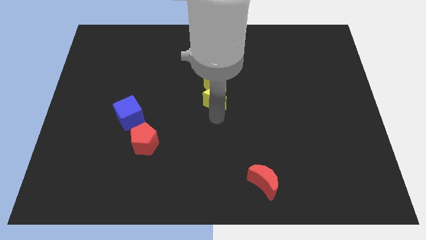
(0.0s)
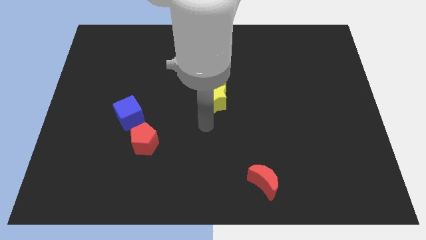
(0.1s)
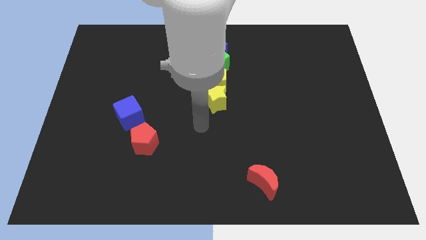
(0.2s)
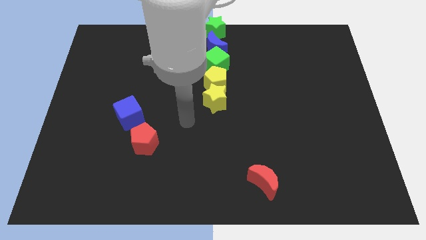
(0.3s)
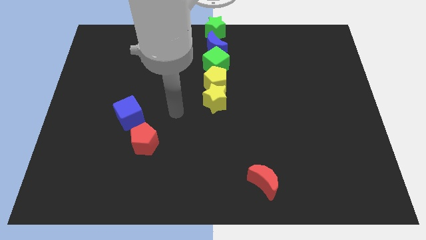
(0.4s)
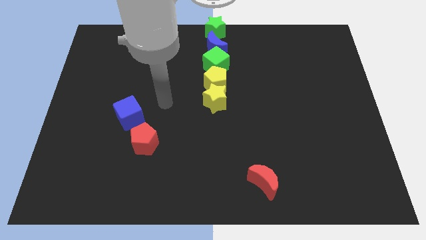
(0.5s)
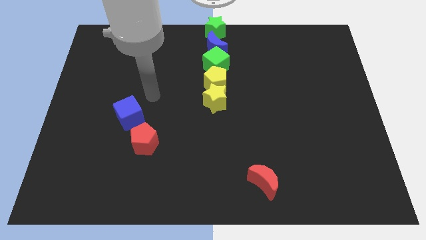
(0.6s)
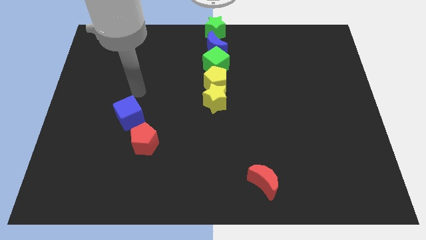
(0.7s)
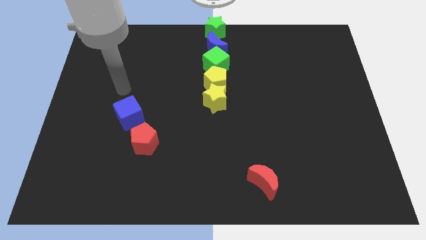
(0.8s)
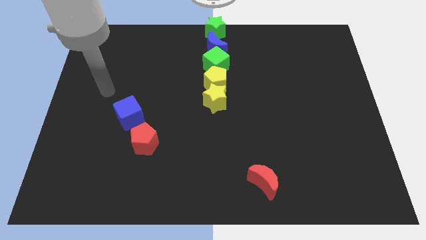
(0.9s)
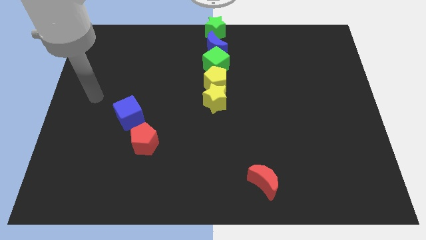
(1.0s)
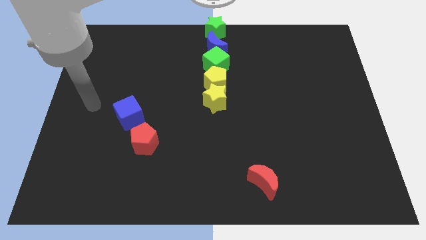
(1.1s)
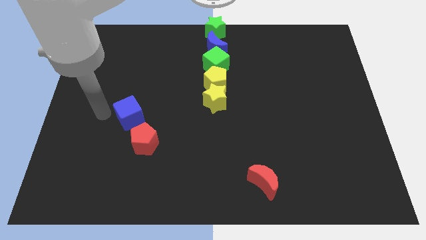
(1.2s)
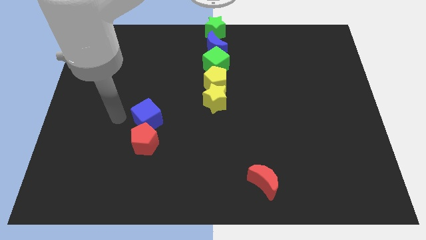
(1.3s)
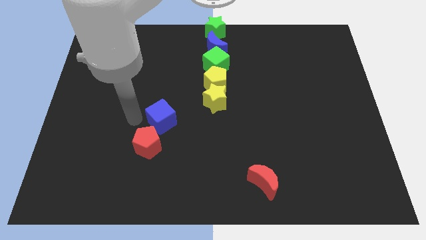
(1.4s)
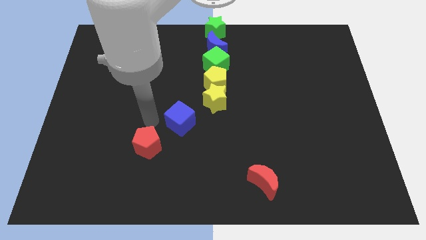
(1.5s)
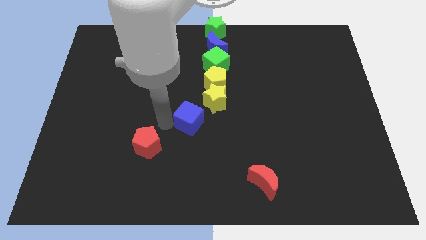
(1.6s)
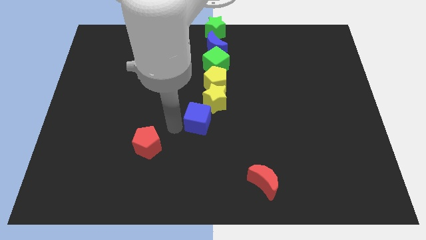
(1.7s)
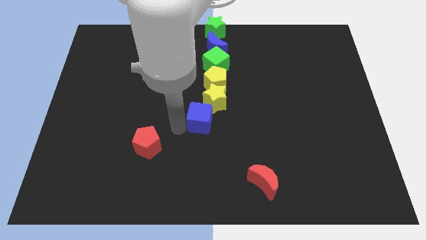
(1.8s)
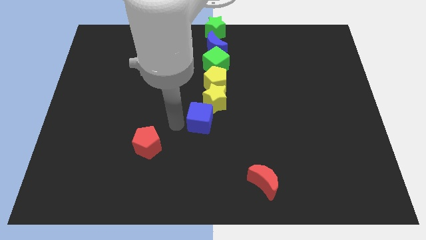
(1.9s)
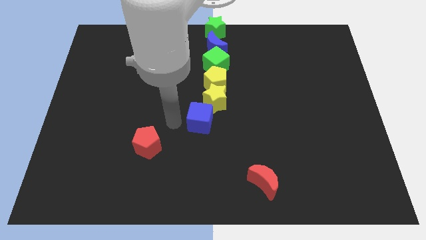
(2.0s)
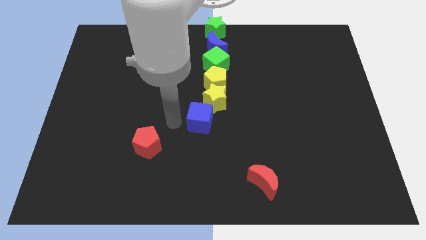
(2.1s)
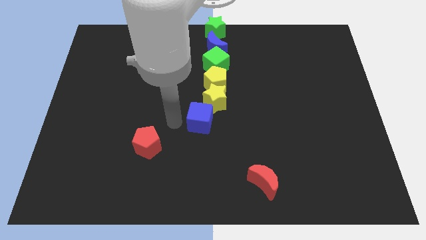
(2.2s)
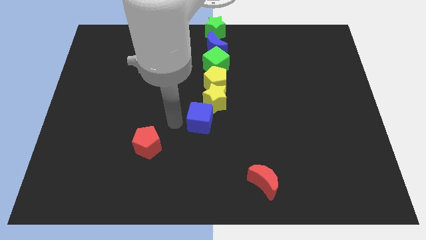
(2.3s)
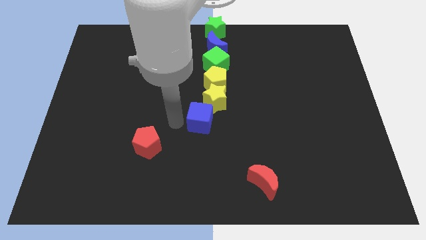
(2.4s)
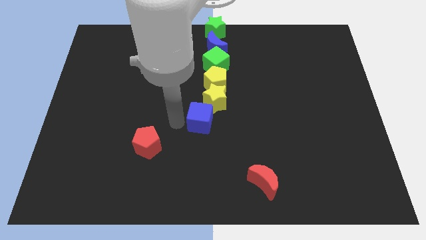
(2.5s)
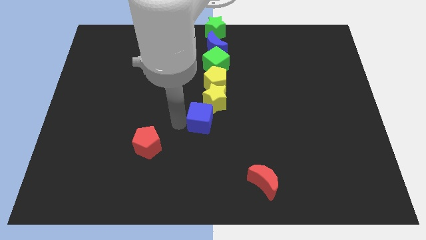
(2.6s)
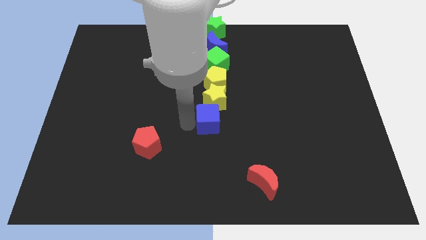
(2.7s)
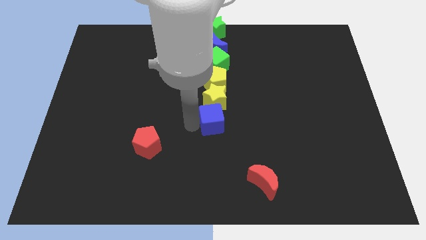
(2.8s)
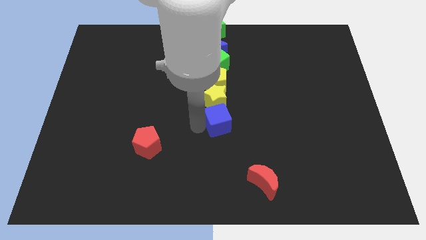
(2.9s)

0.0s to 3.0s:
push the blue cube towards the bottom of the yellow star

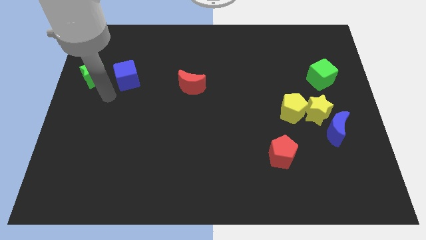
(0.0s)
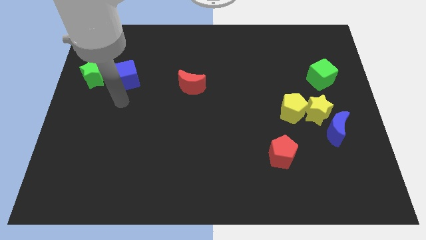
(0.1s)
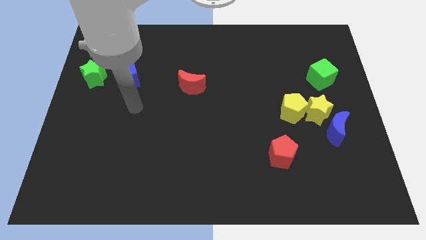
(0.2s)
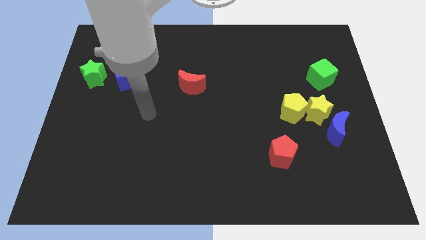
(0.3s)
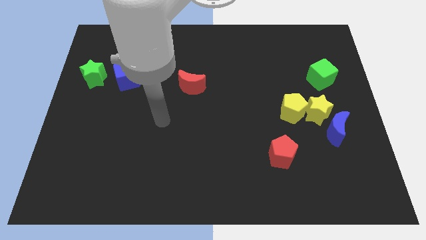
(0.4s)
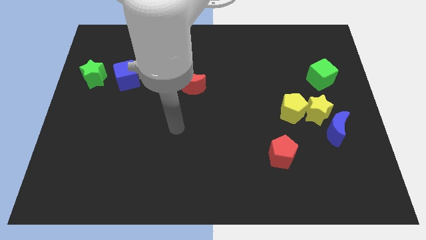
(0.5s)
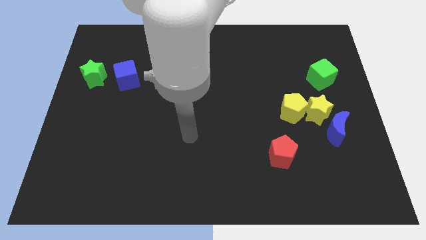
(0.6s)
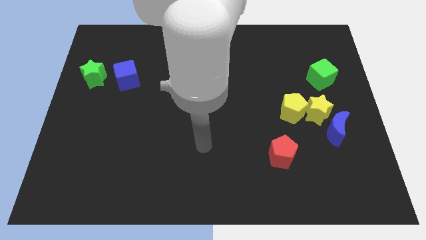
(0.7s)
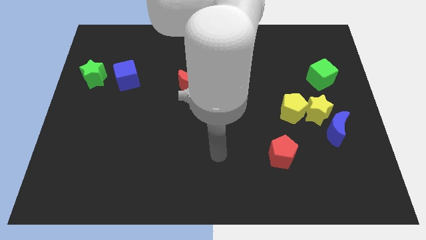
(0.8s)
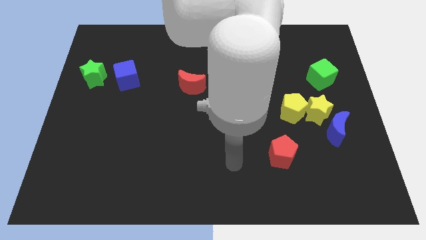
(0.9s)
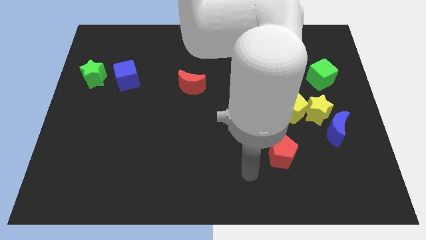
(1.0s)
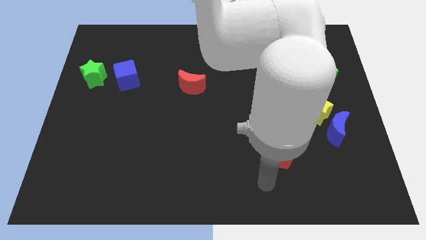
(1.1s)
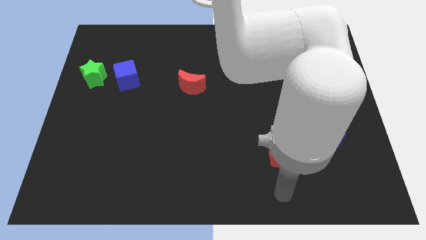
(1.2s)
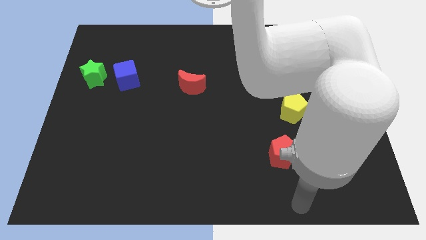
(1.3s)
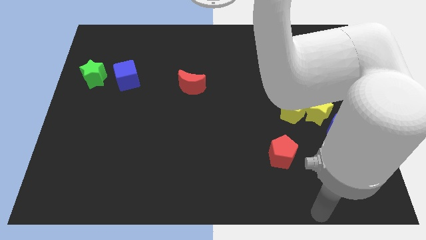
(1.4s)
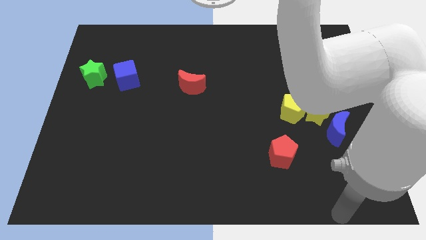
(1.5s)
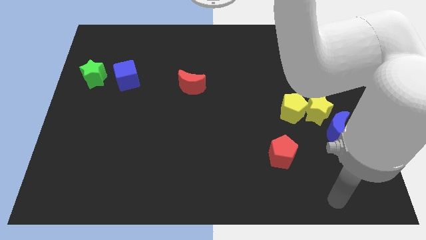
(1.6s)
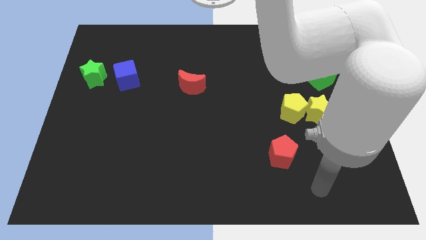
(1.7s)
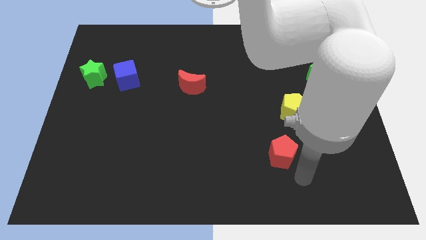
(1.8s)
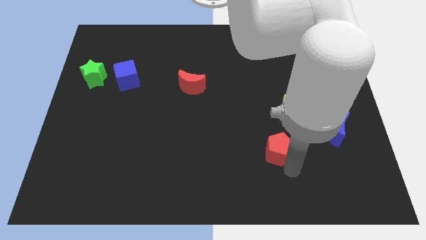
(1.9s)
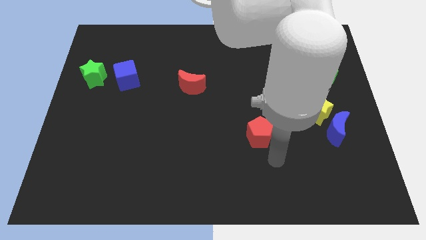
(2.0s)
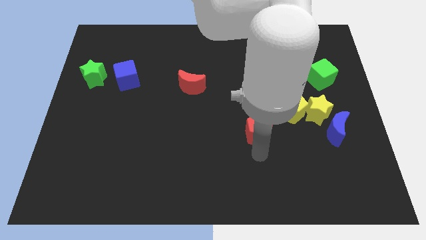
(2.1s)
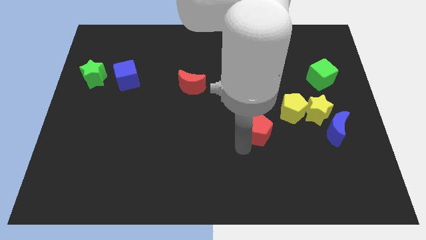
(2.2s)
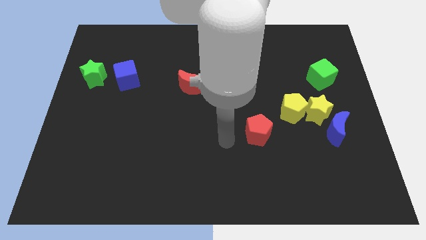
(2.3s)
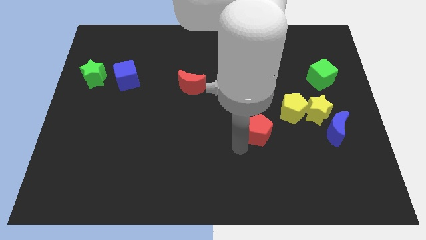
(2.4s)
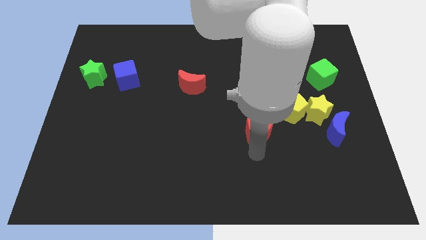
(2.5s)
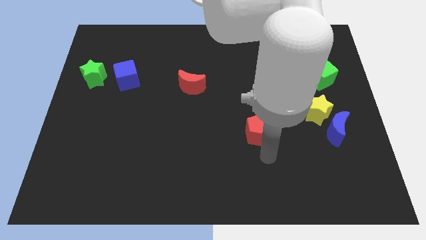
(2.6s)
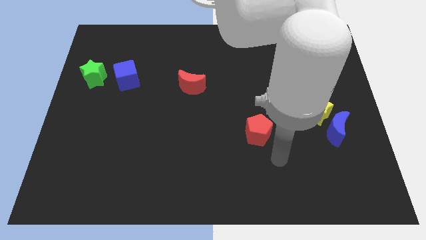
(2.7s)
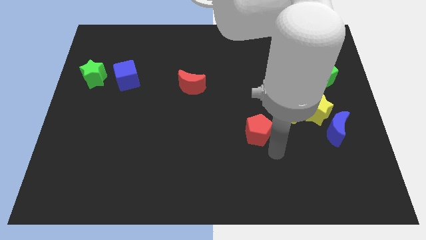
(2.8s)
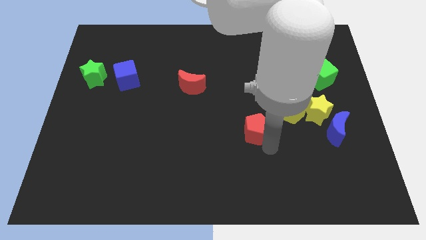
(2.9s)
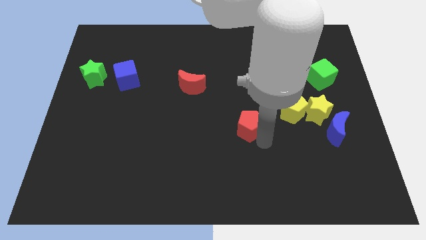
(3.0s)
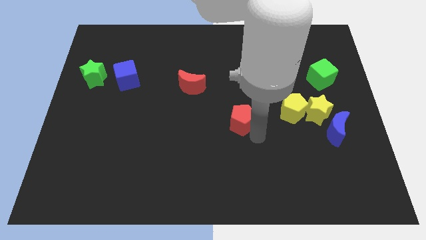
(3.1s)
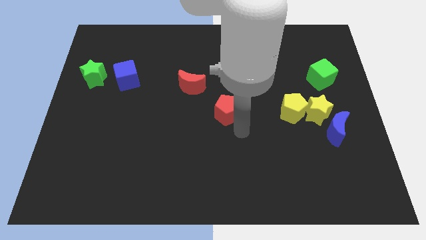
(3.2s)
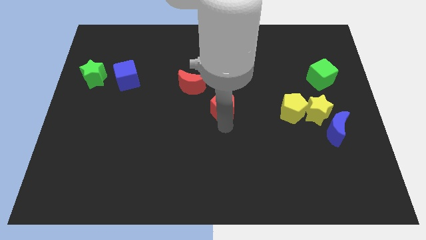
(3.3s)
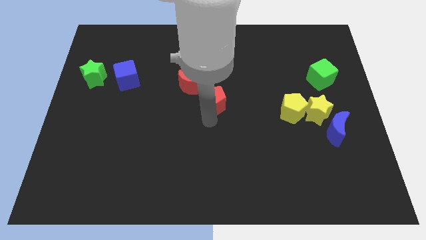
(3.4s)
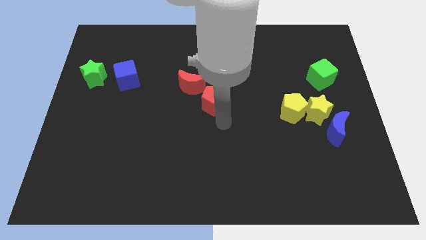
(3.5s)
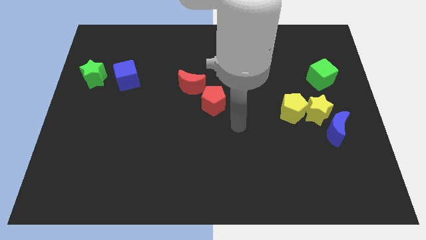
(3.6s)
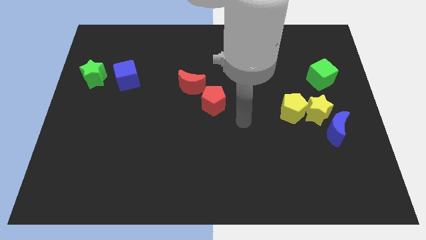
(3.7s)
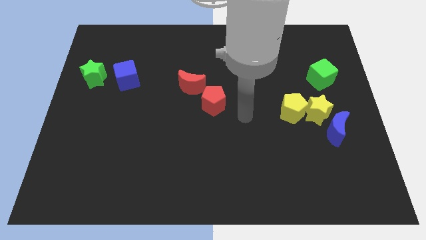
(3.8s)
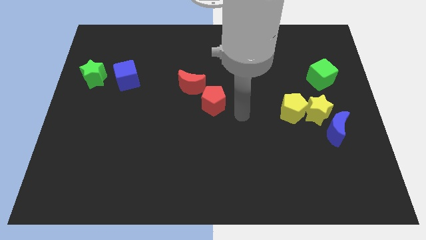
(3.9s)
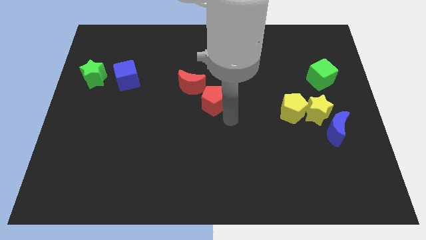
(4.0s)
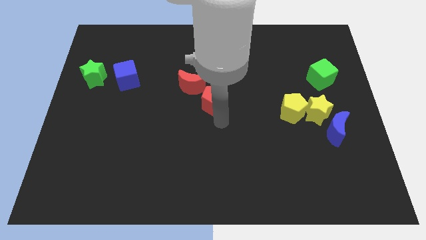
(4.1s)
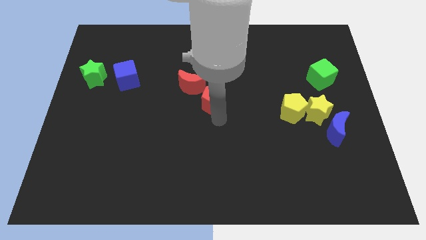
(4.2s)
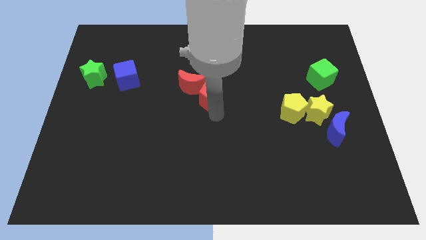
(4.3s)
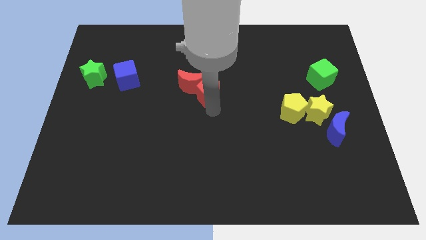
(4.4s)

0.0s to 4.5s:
move red pentagon right below the red moon

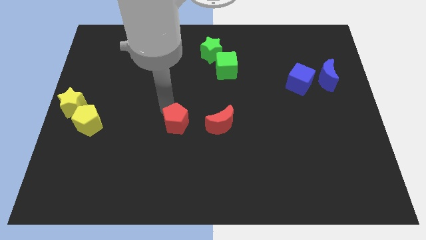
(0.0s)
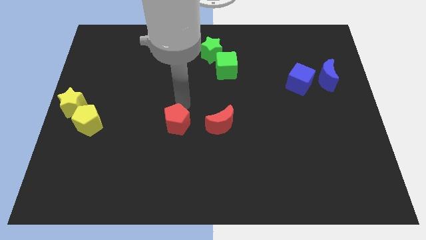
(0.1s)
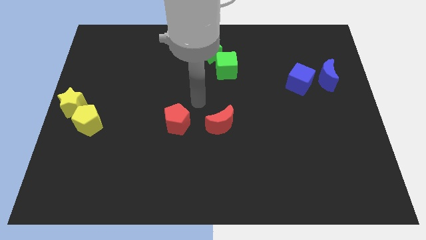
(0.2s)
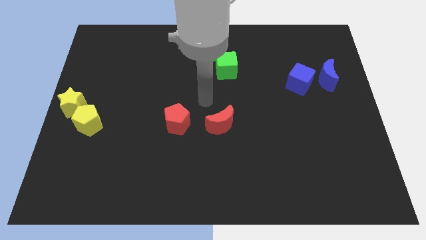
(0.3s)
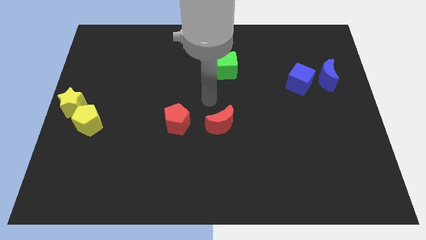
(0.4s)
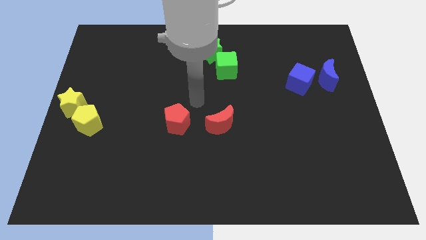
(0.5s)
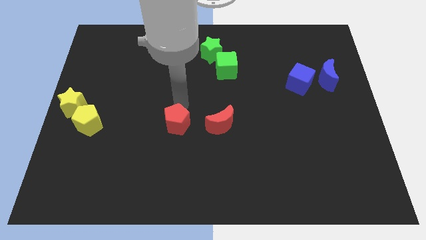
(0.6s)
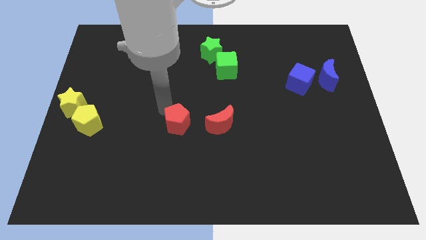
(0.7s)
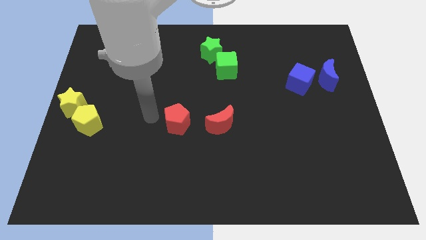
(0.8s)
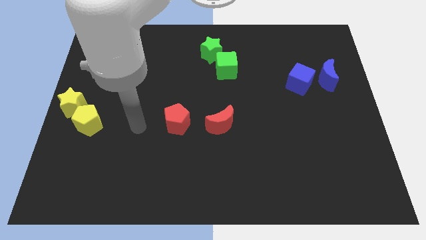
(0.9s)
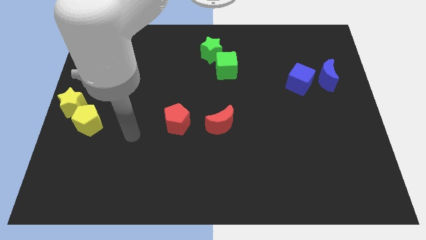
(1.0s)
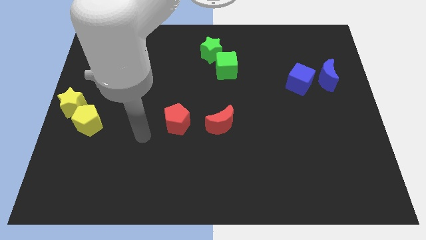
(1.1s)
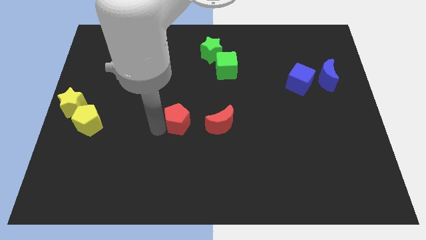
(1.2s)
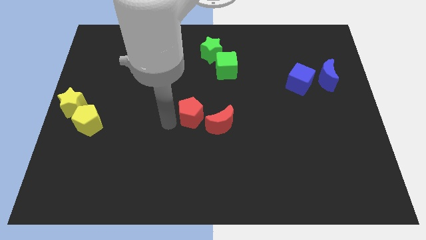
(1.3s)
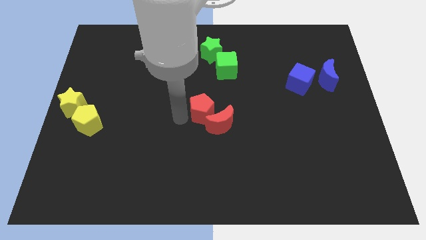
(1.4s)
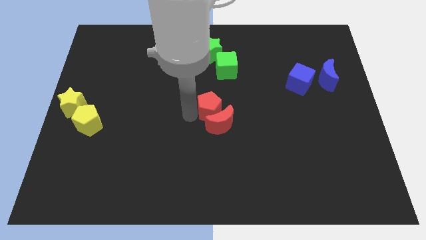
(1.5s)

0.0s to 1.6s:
place the red pentagon to the top left of the red crescent
